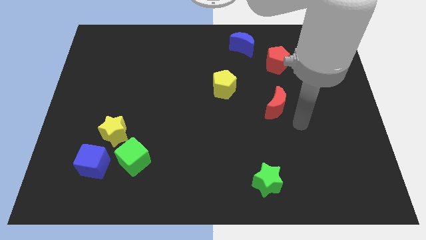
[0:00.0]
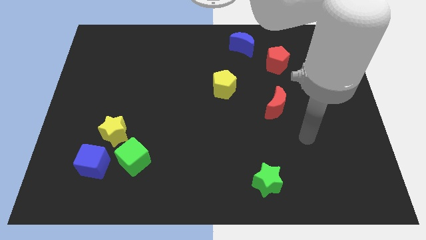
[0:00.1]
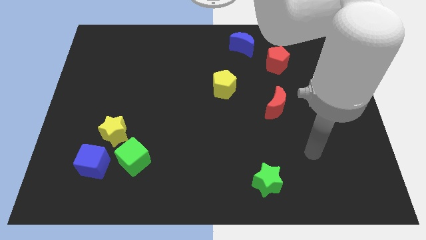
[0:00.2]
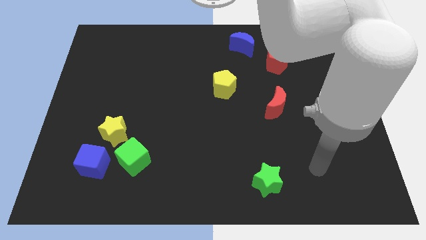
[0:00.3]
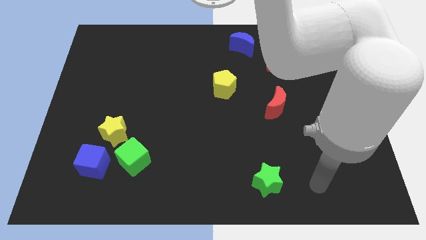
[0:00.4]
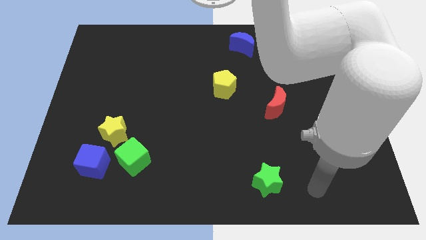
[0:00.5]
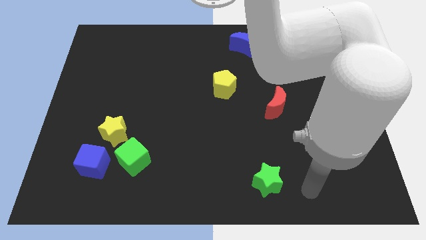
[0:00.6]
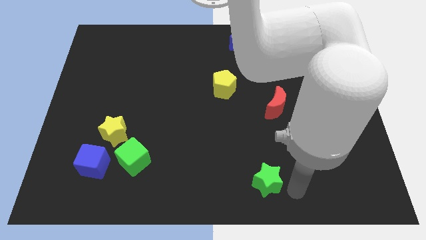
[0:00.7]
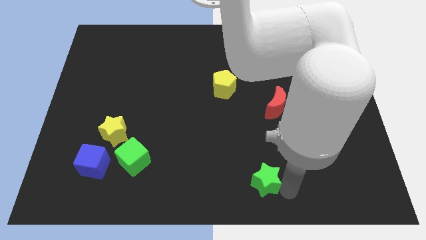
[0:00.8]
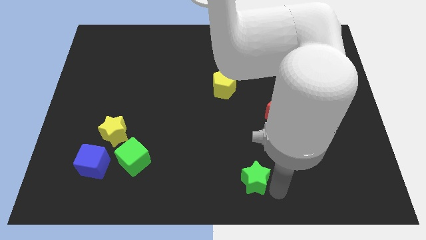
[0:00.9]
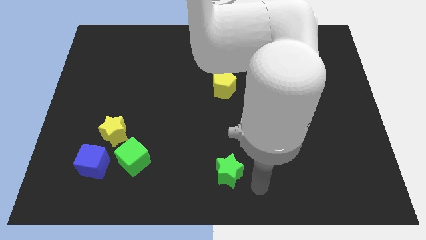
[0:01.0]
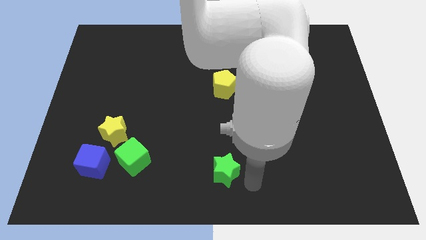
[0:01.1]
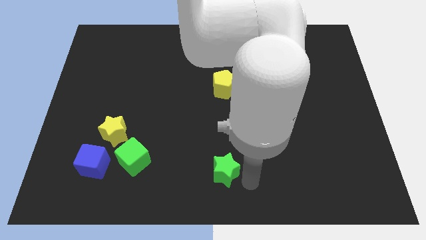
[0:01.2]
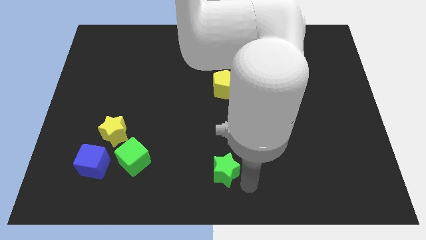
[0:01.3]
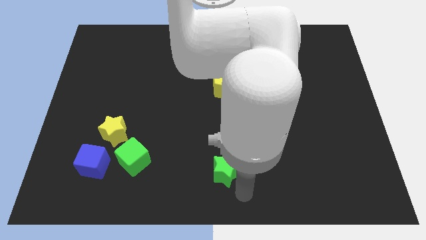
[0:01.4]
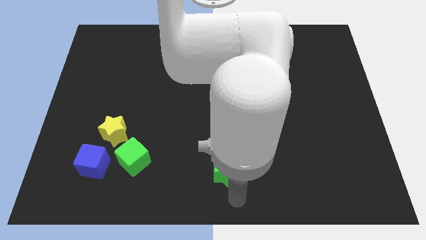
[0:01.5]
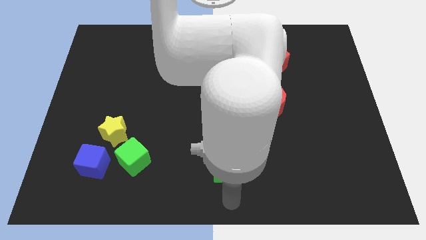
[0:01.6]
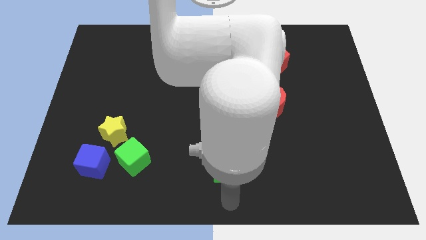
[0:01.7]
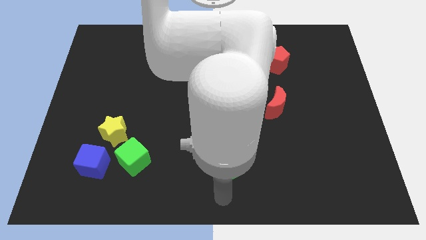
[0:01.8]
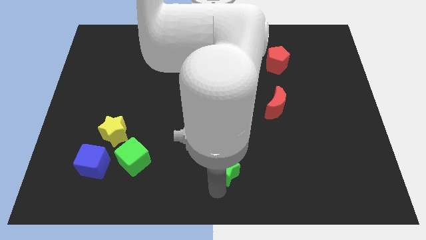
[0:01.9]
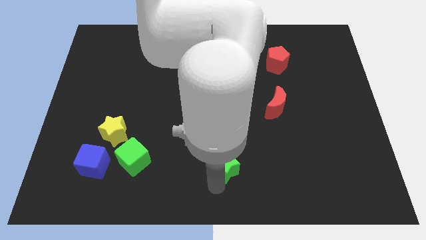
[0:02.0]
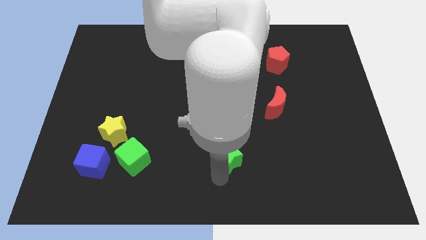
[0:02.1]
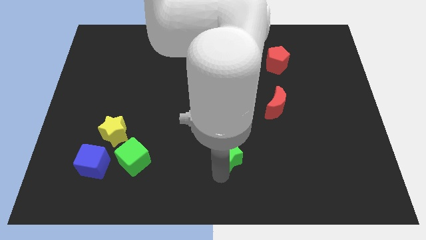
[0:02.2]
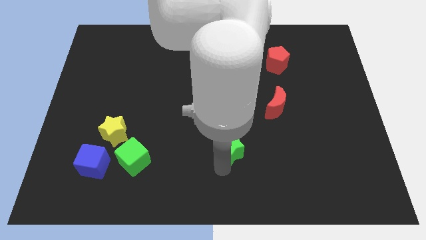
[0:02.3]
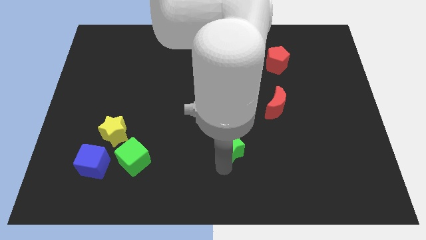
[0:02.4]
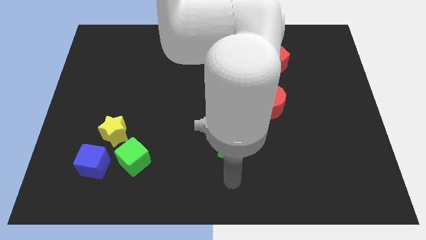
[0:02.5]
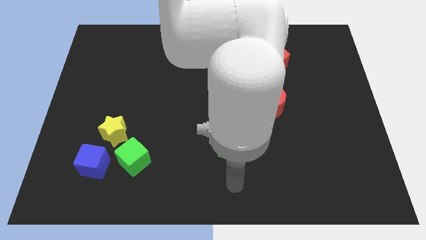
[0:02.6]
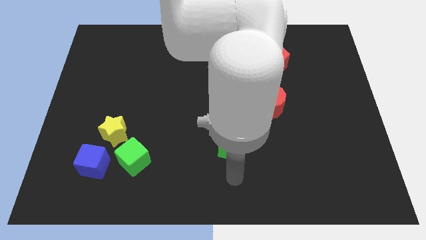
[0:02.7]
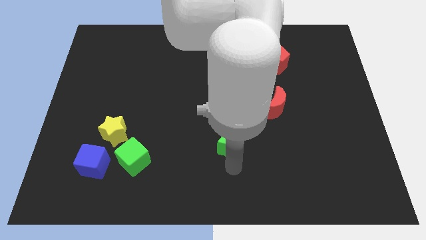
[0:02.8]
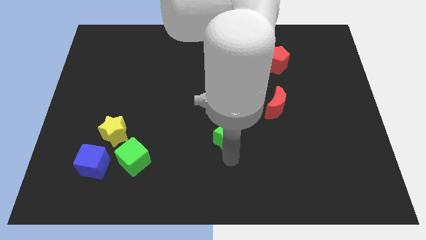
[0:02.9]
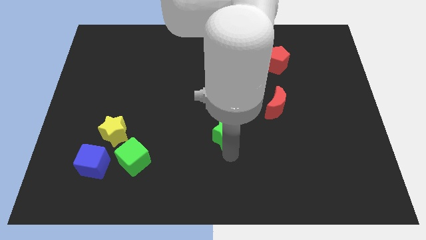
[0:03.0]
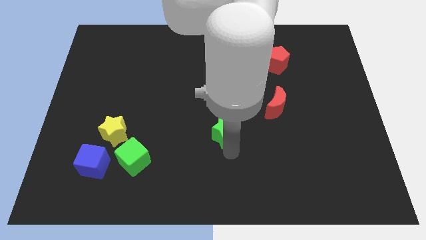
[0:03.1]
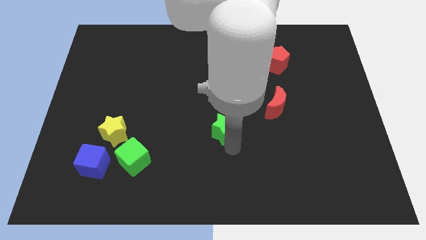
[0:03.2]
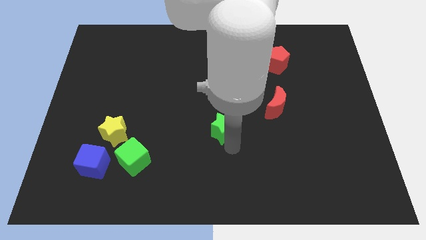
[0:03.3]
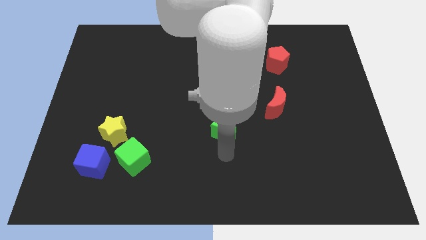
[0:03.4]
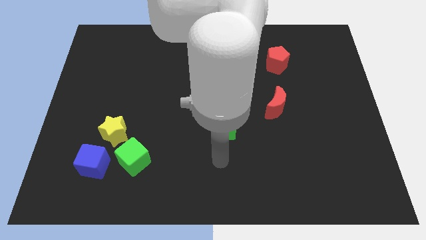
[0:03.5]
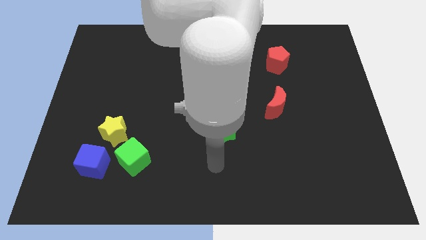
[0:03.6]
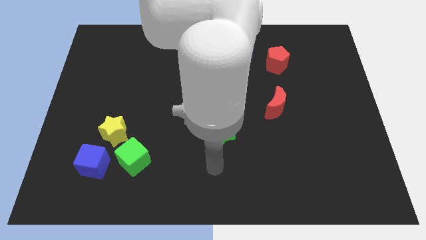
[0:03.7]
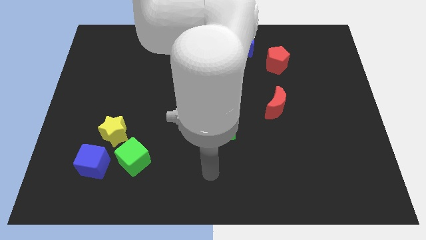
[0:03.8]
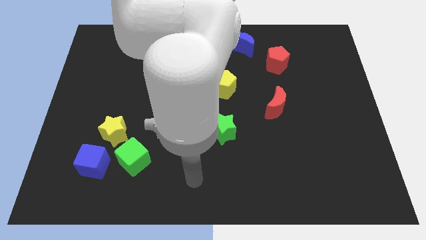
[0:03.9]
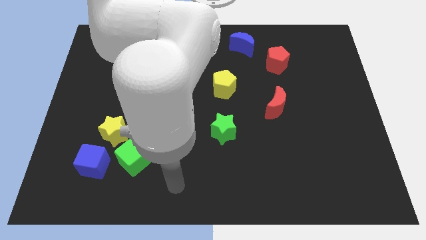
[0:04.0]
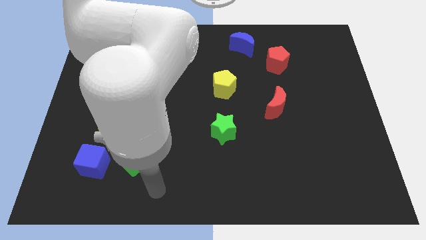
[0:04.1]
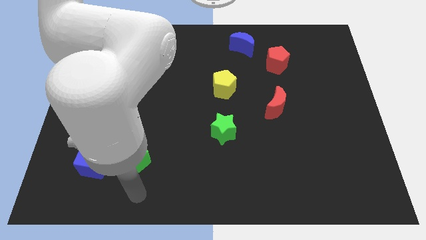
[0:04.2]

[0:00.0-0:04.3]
move the green star vertical to the yellow pentagon

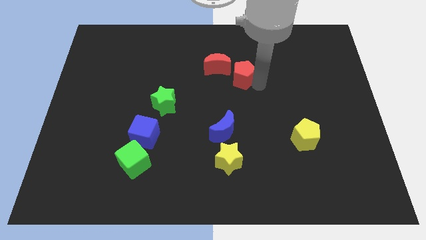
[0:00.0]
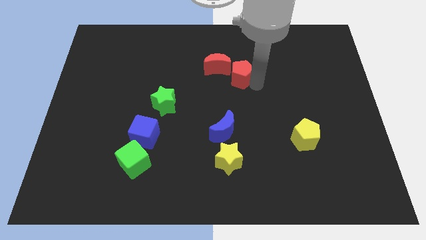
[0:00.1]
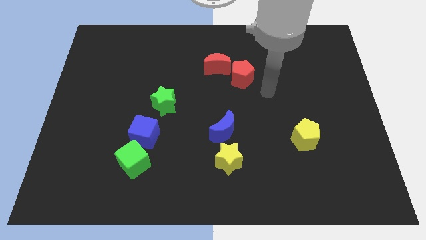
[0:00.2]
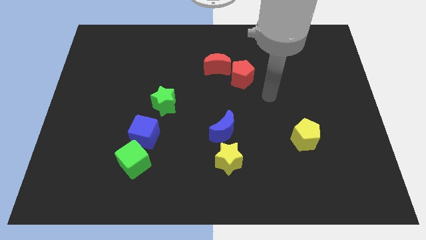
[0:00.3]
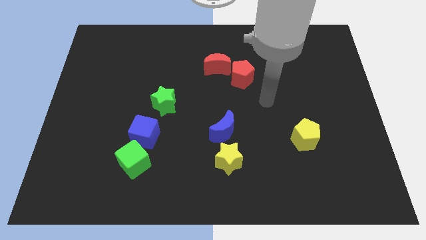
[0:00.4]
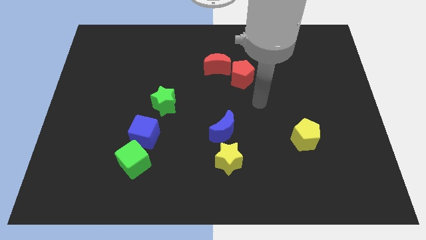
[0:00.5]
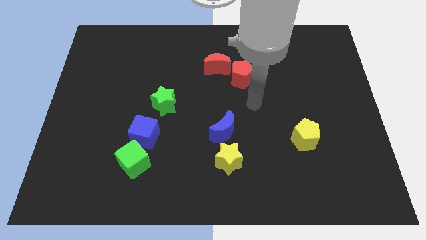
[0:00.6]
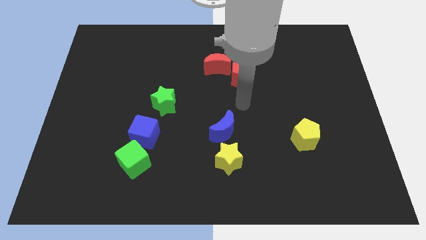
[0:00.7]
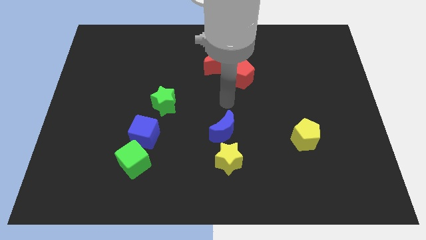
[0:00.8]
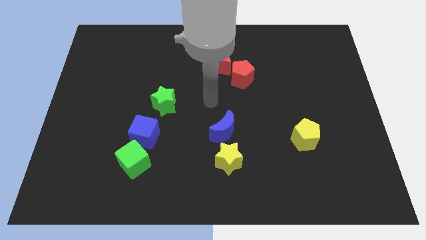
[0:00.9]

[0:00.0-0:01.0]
place your arm at the center of the board

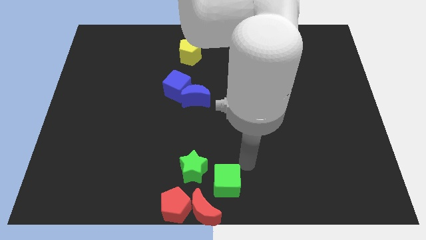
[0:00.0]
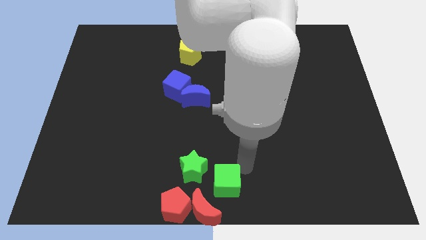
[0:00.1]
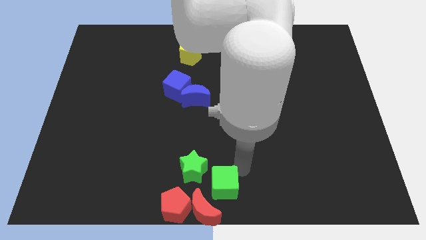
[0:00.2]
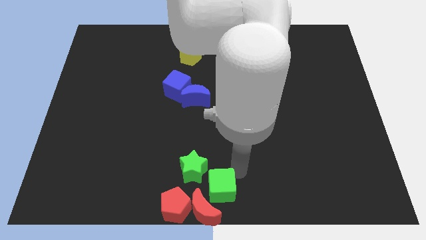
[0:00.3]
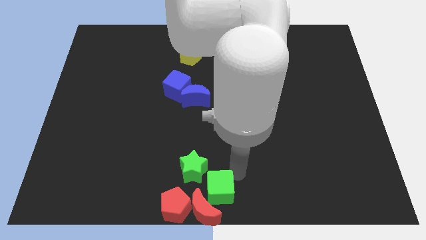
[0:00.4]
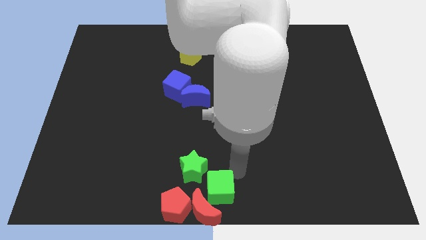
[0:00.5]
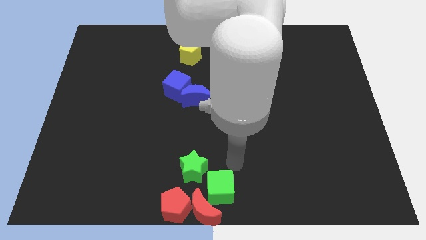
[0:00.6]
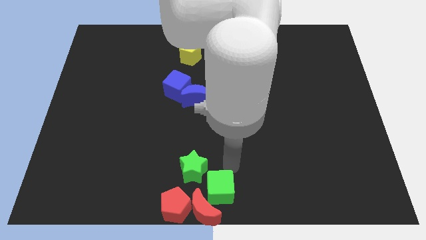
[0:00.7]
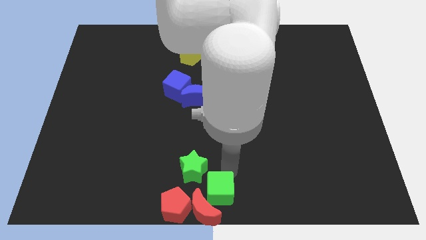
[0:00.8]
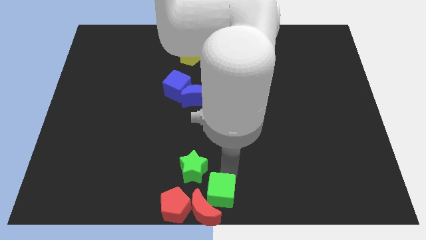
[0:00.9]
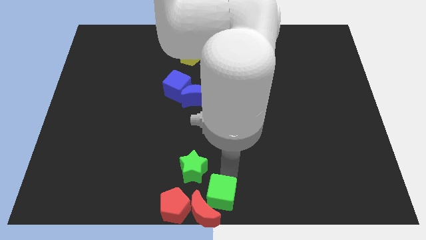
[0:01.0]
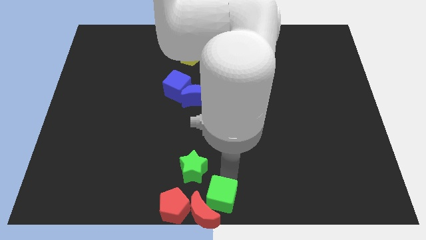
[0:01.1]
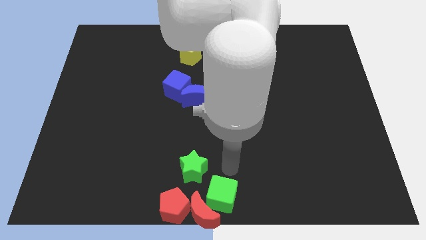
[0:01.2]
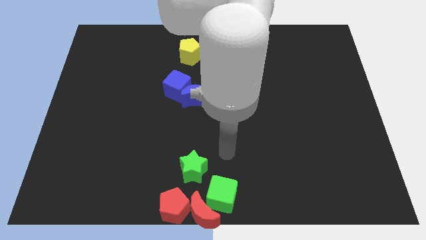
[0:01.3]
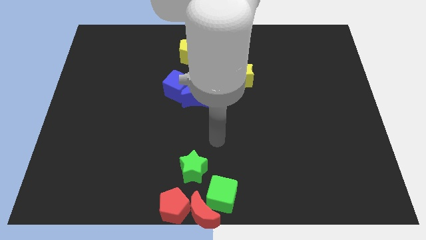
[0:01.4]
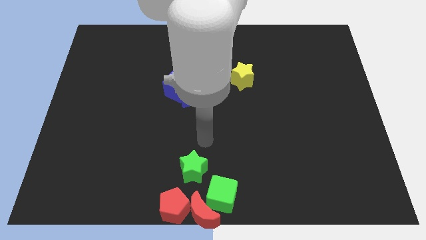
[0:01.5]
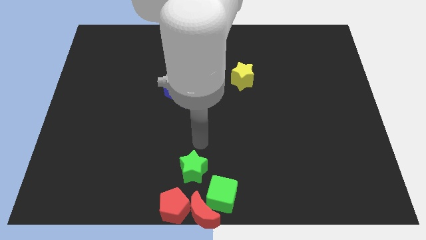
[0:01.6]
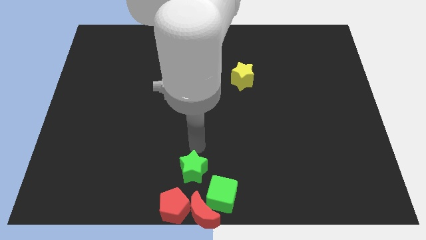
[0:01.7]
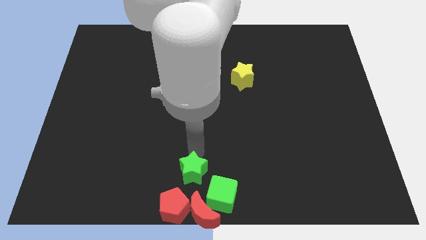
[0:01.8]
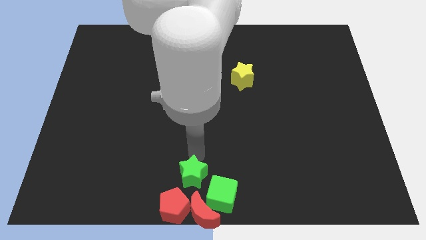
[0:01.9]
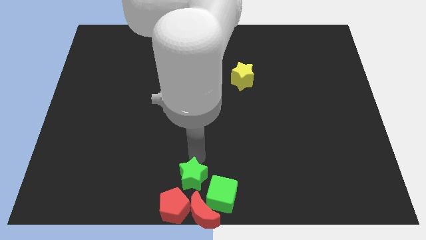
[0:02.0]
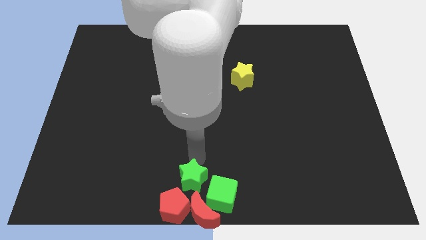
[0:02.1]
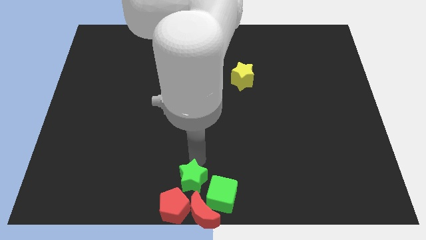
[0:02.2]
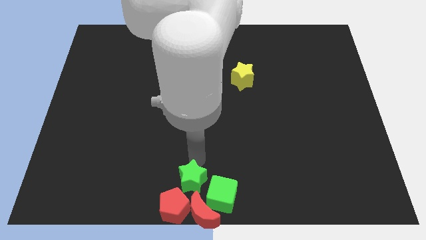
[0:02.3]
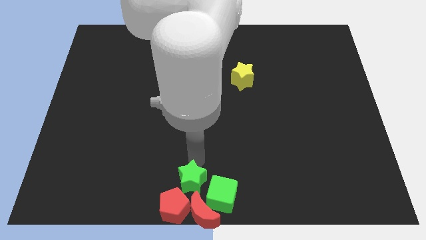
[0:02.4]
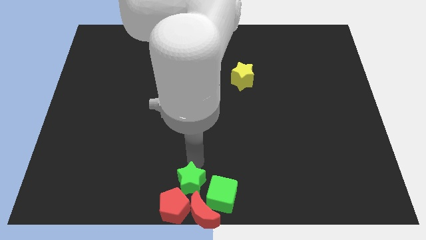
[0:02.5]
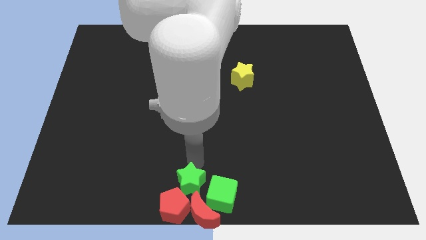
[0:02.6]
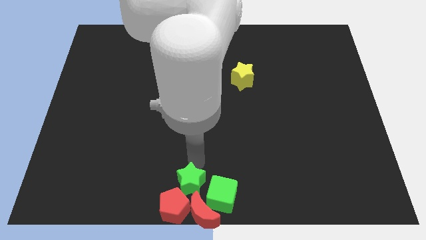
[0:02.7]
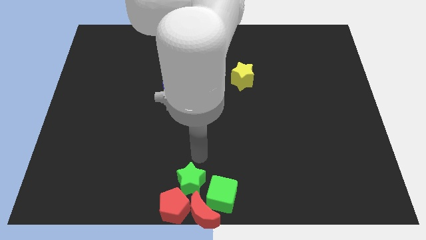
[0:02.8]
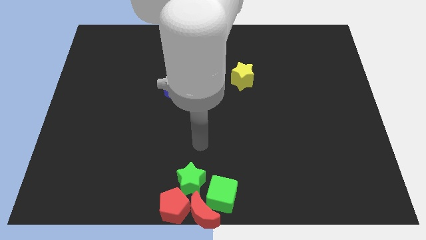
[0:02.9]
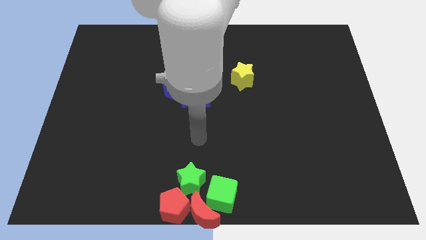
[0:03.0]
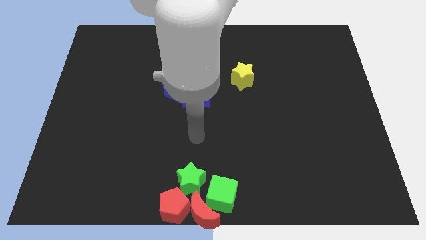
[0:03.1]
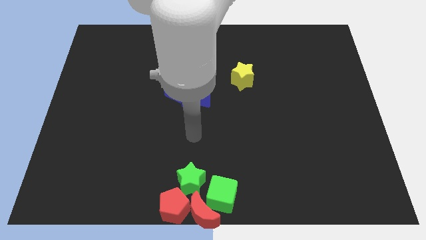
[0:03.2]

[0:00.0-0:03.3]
push the green cube and green star into the group of blocks

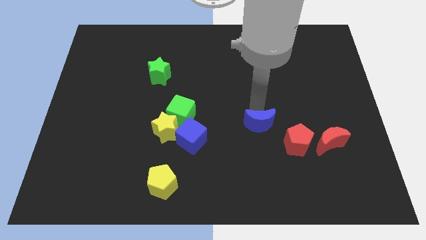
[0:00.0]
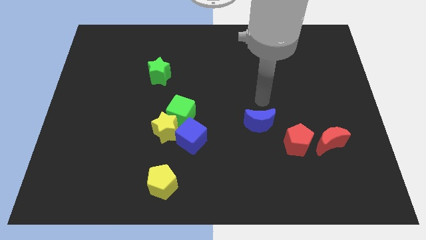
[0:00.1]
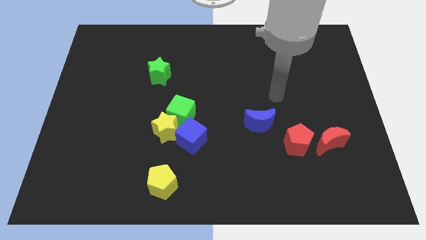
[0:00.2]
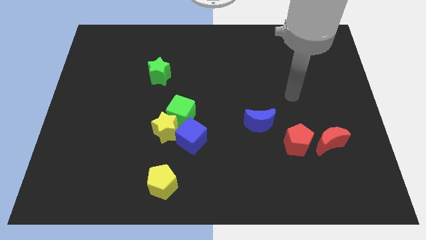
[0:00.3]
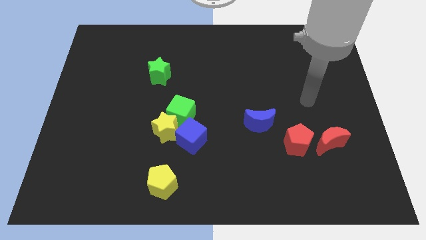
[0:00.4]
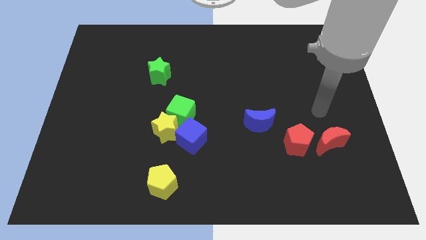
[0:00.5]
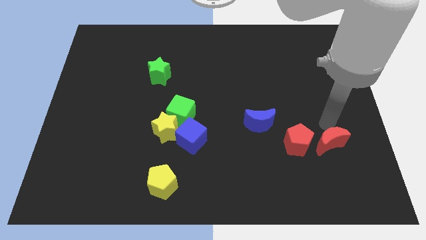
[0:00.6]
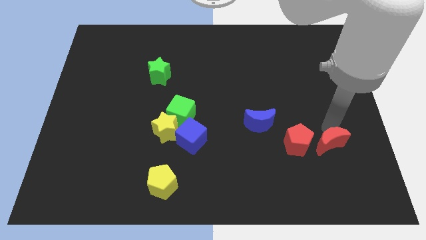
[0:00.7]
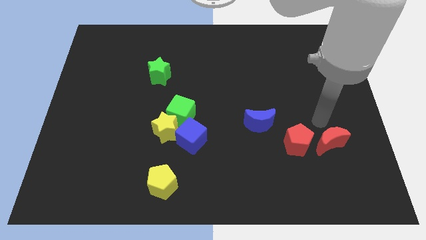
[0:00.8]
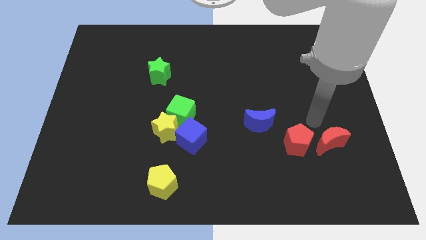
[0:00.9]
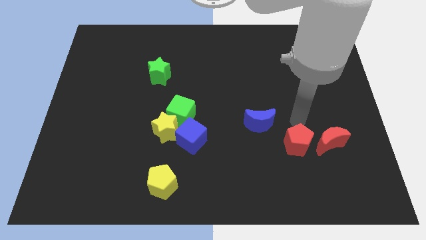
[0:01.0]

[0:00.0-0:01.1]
point your arm above the red pentagon
